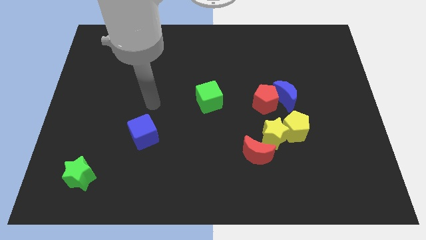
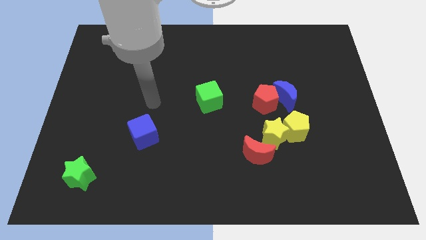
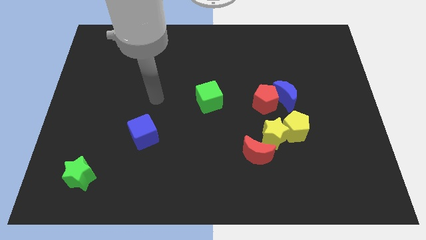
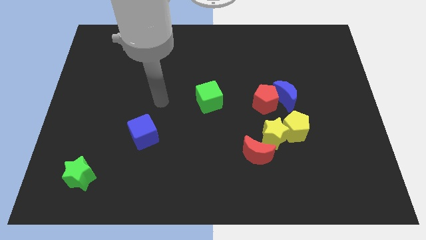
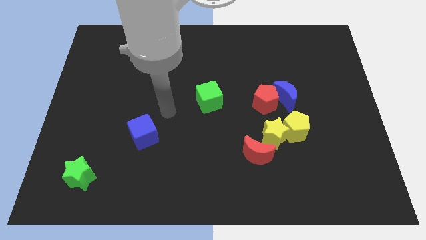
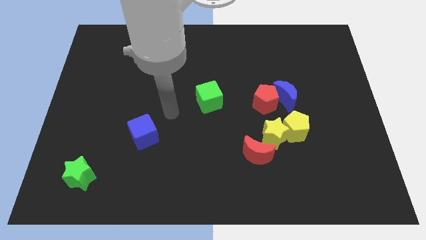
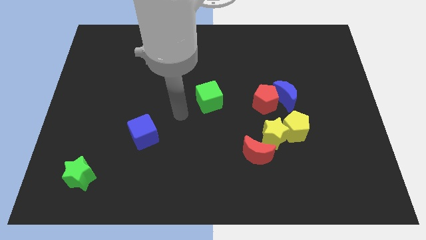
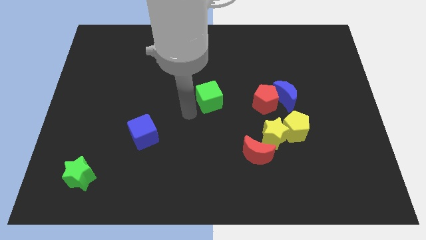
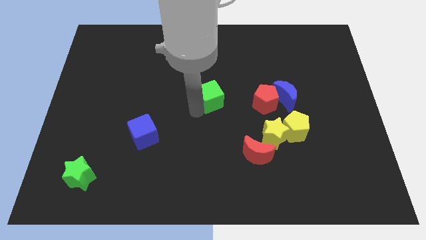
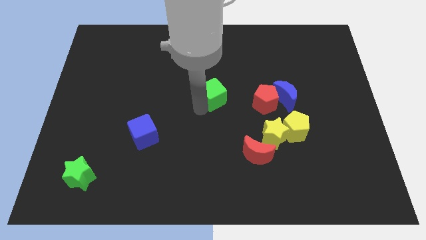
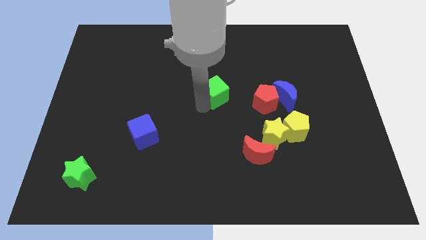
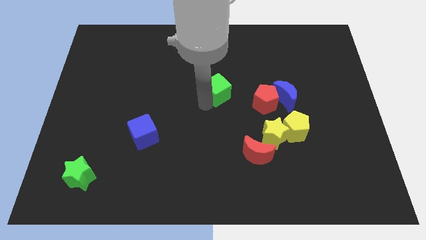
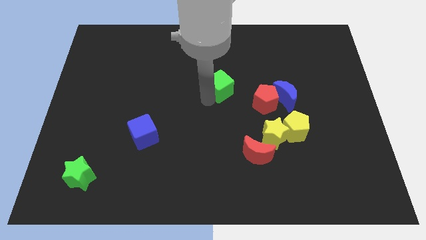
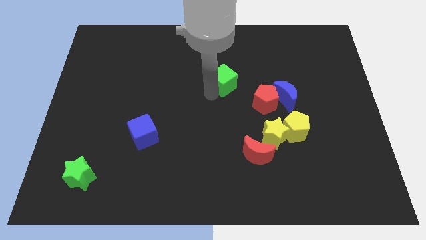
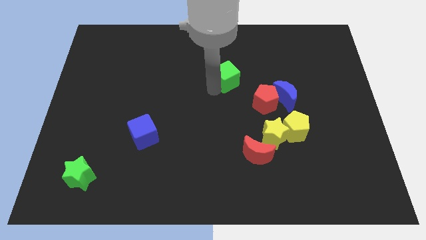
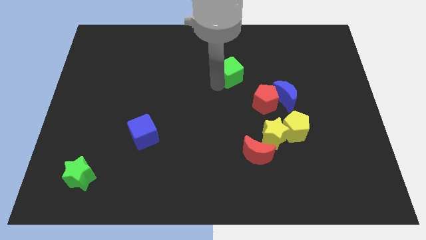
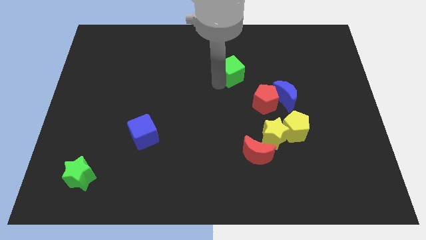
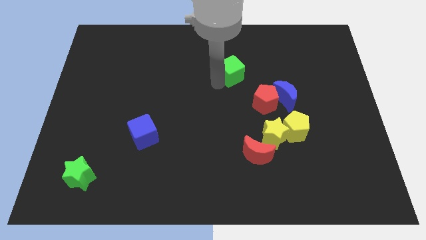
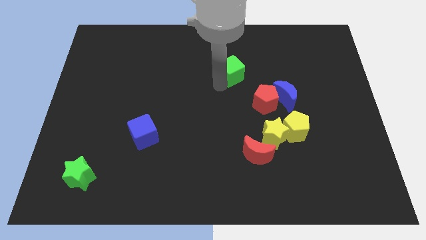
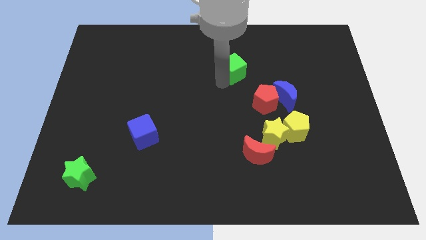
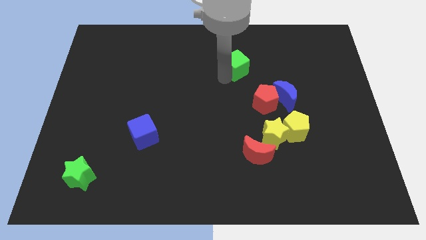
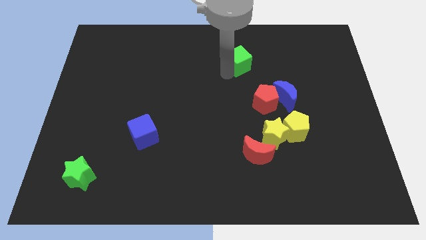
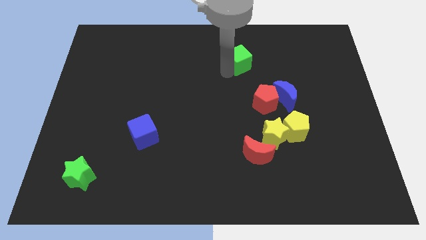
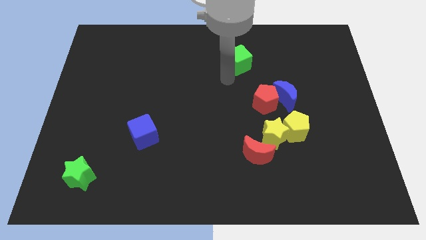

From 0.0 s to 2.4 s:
push the green cube to the top left of the red pentagon

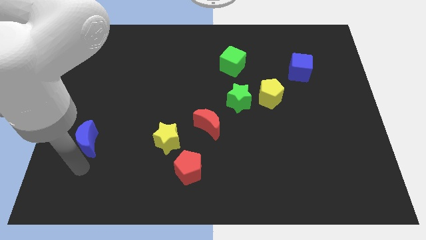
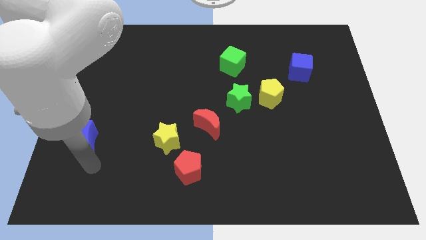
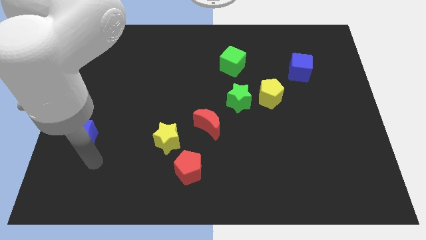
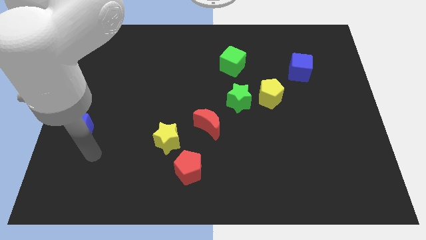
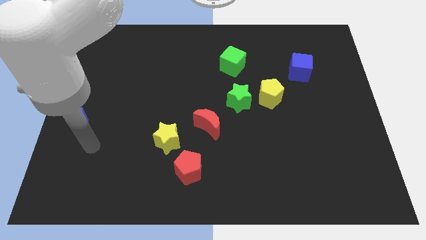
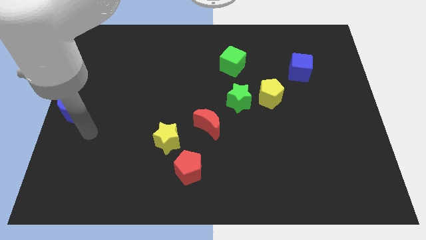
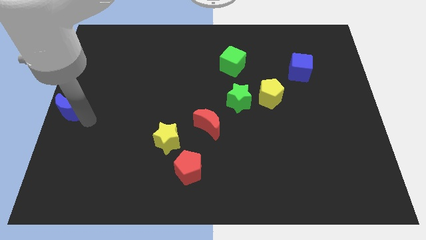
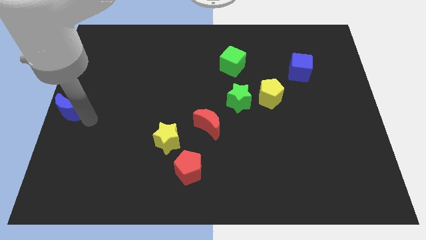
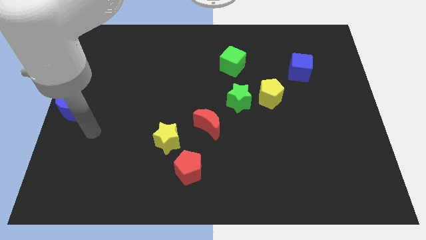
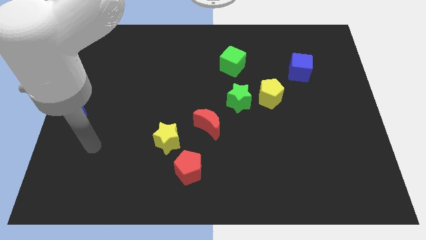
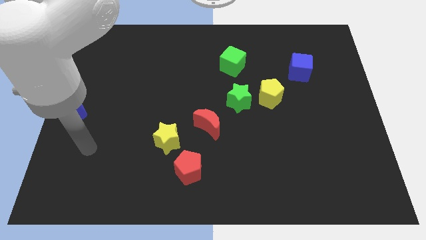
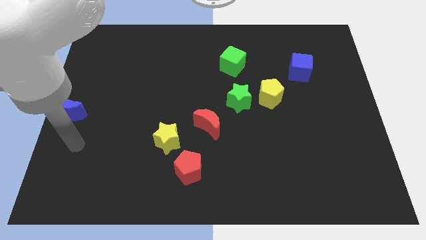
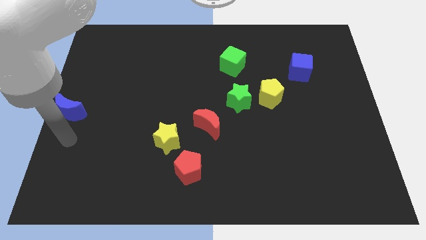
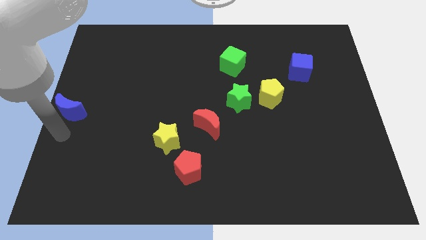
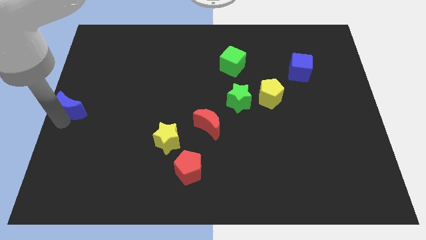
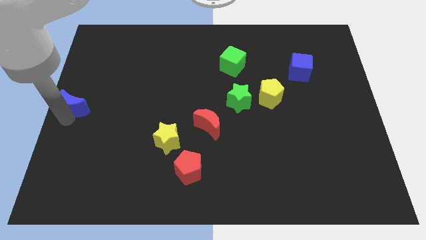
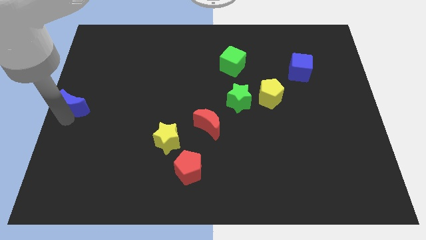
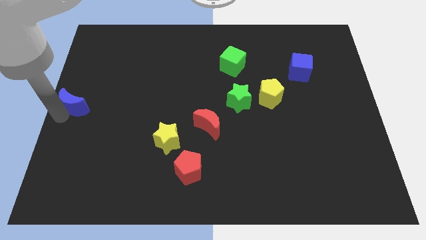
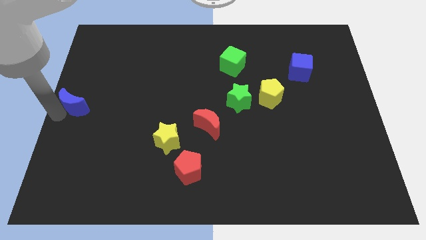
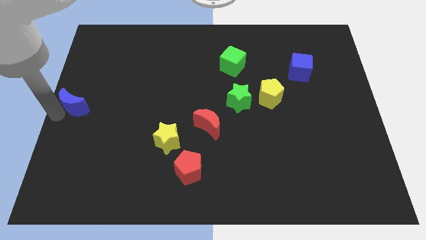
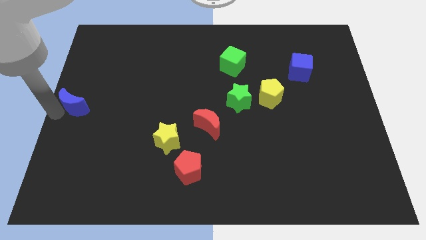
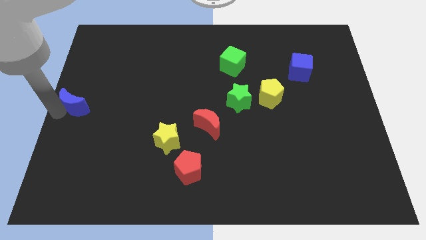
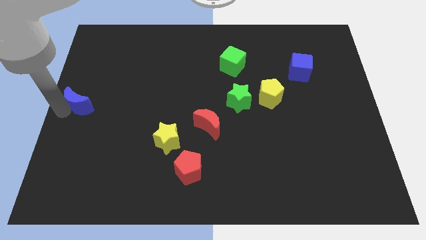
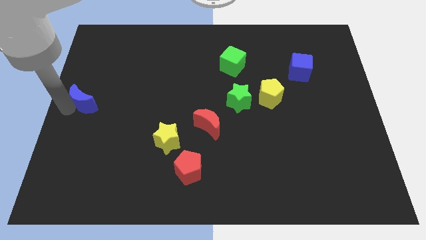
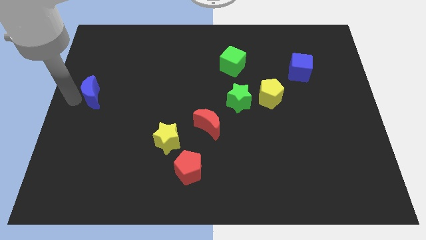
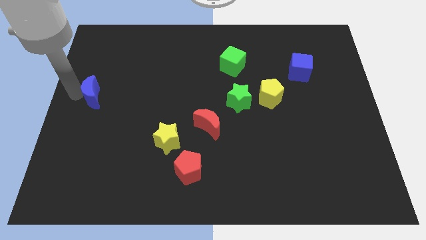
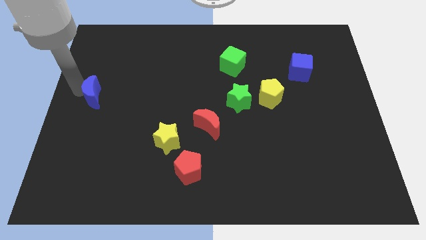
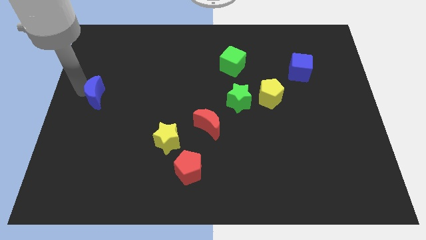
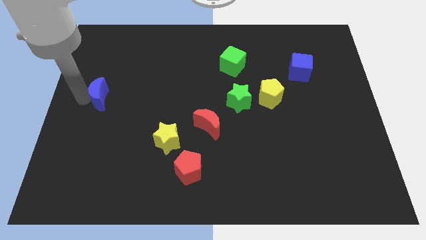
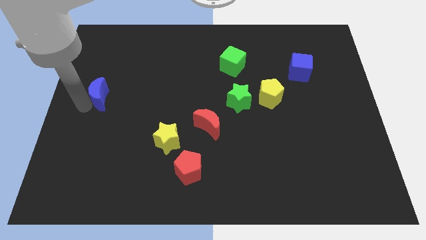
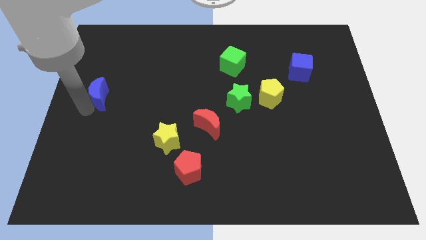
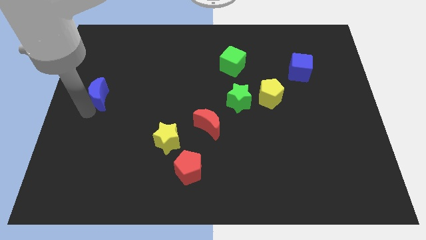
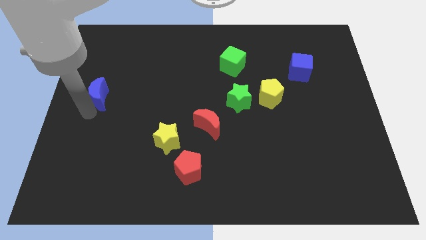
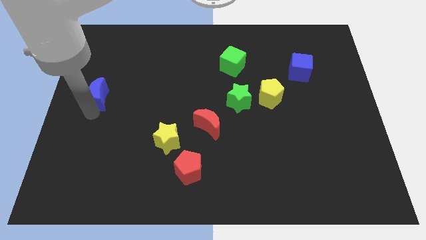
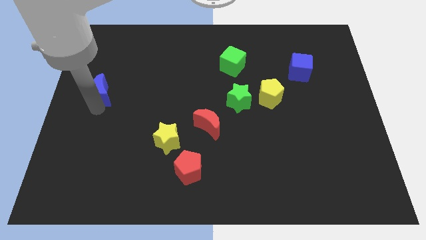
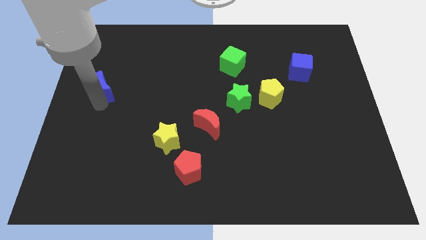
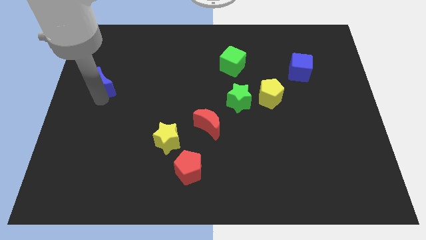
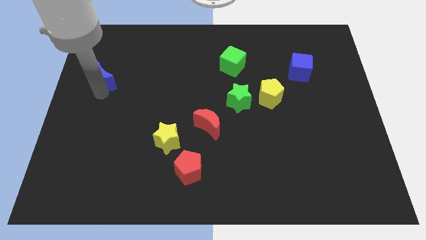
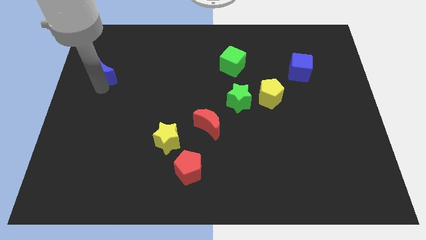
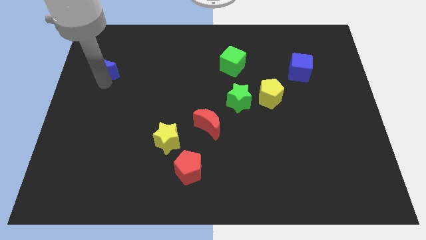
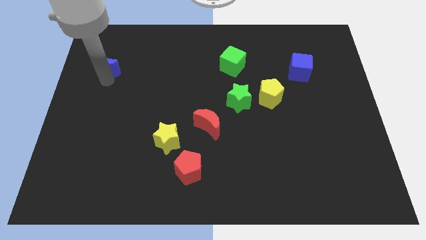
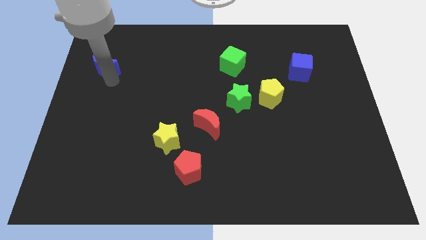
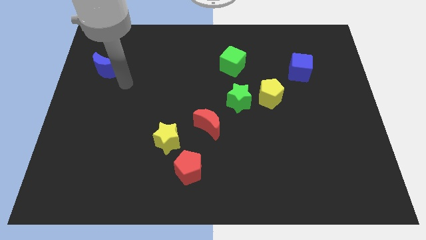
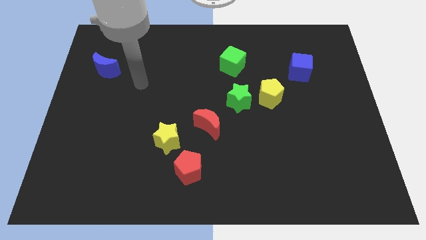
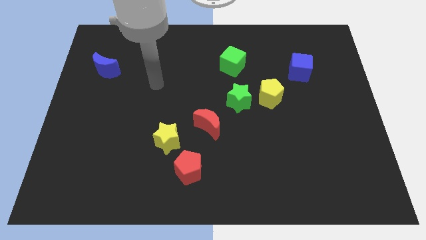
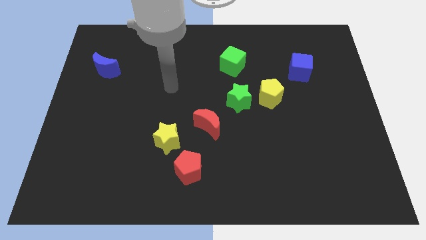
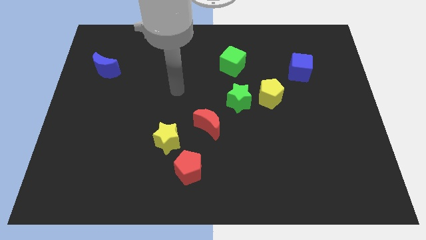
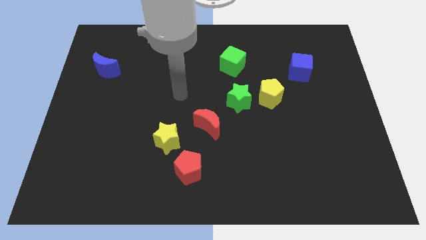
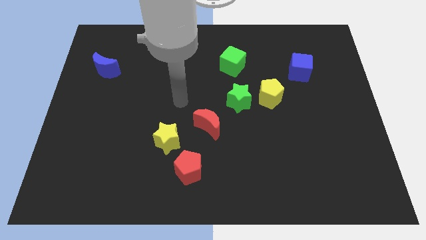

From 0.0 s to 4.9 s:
push the blue crescent towards the top of the board

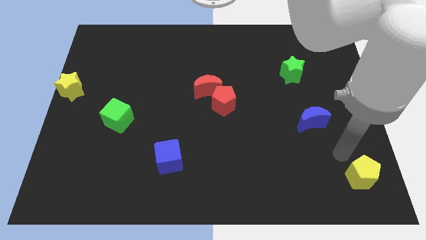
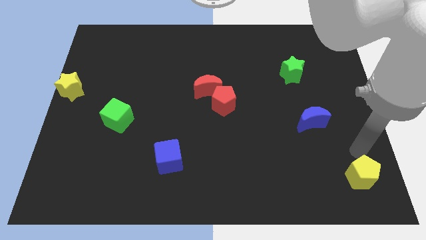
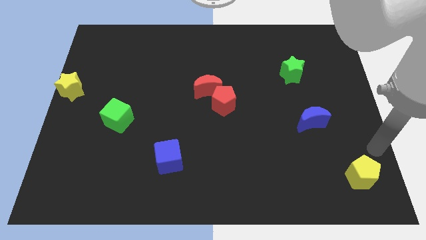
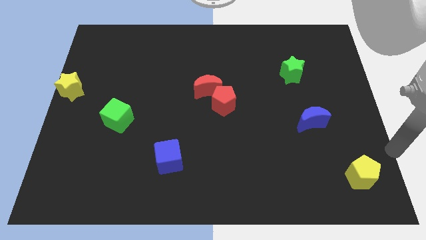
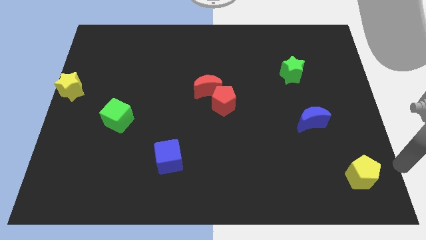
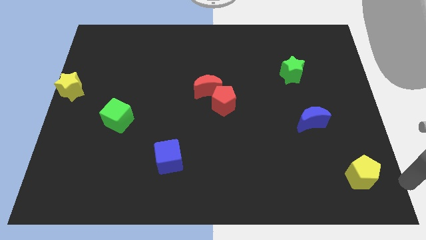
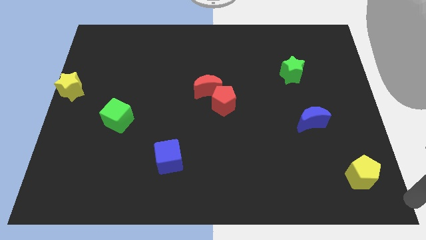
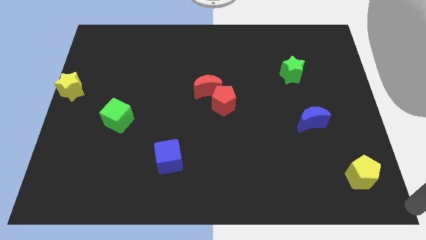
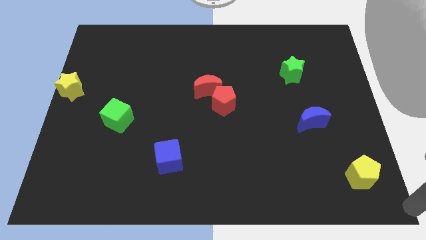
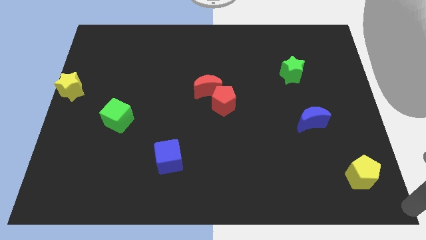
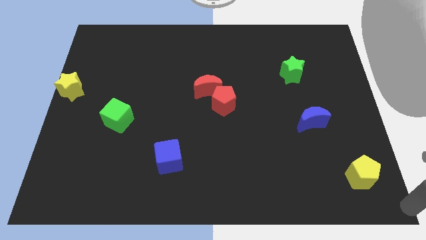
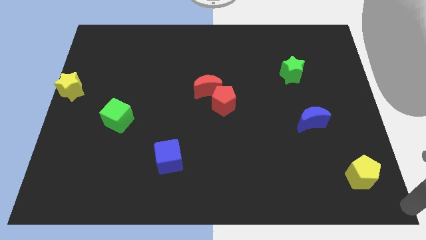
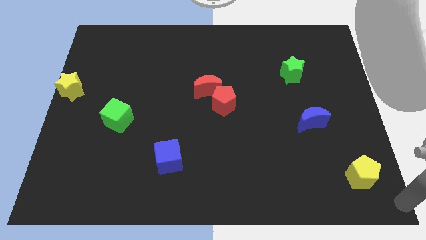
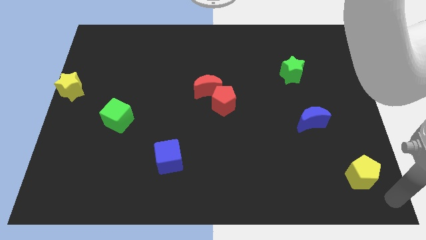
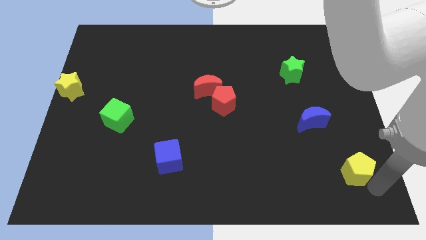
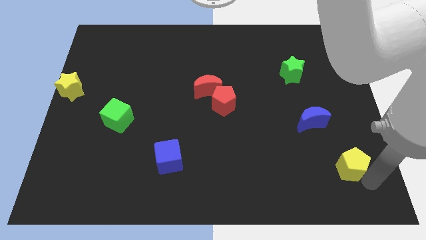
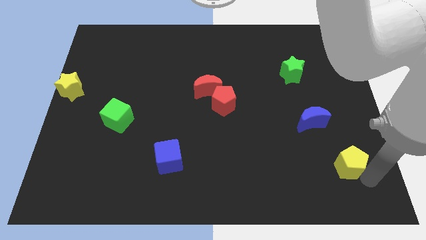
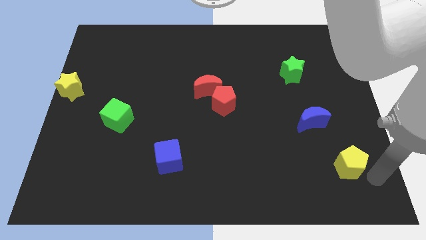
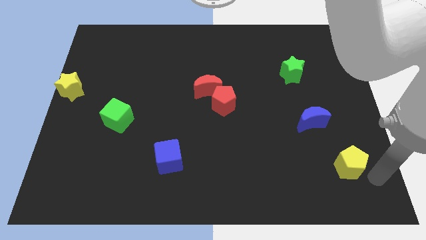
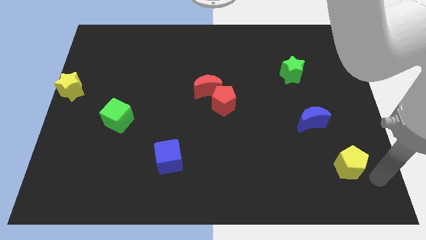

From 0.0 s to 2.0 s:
push the yellow pentagon towards the bottom right side of the blue crescent
